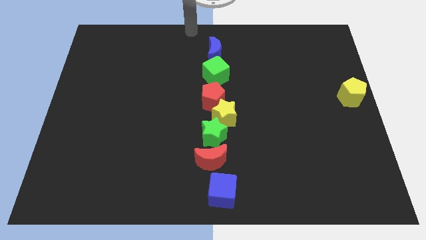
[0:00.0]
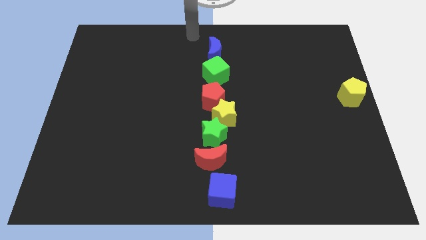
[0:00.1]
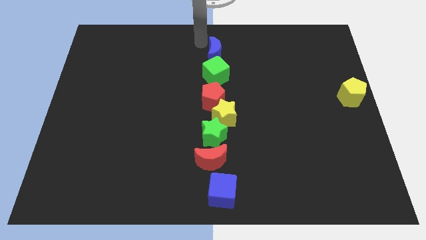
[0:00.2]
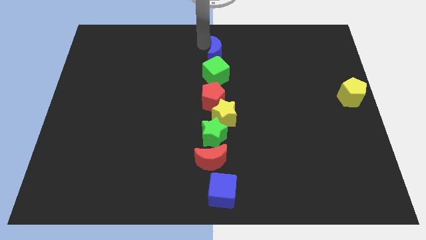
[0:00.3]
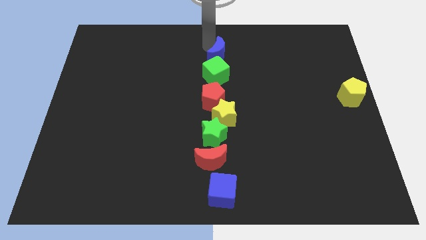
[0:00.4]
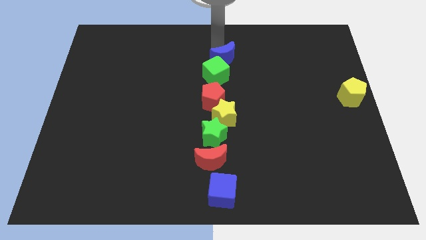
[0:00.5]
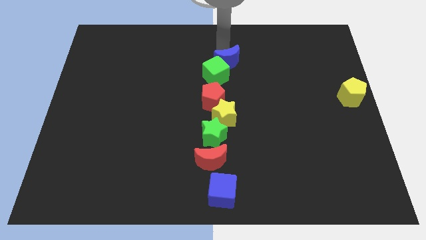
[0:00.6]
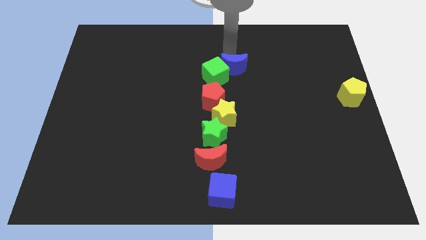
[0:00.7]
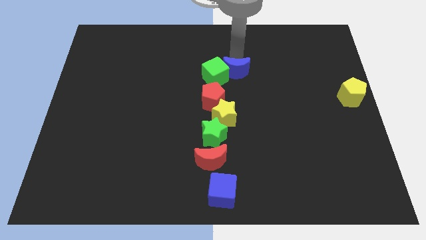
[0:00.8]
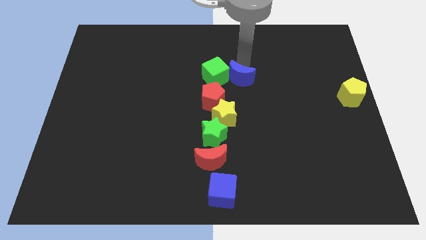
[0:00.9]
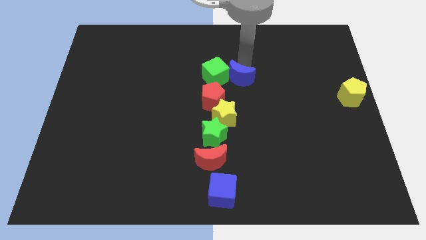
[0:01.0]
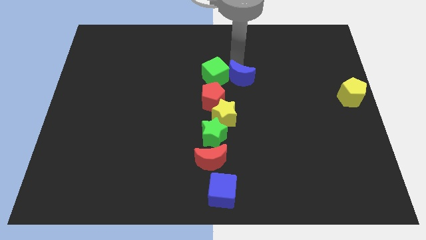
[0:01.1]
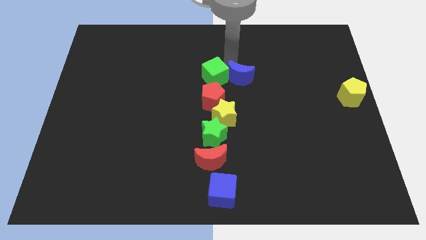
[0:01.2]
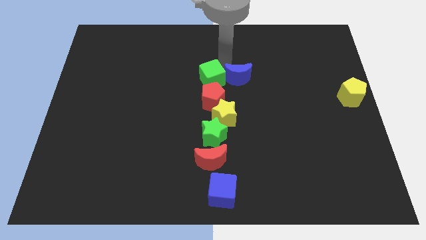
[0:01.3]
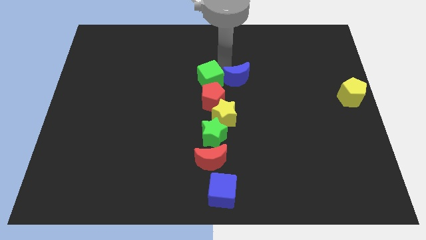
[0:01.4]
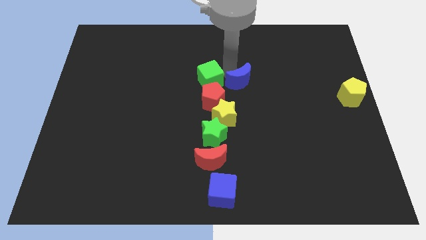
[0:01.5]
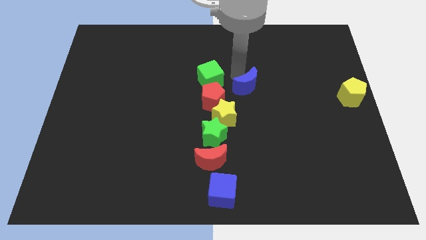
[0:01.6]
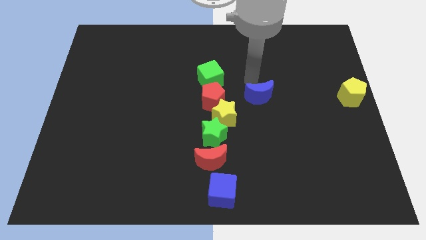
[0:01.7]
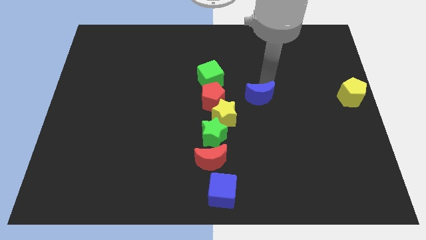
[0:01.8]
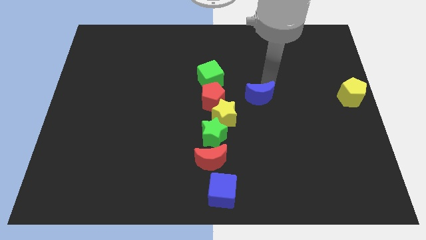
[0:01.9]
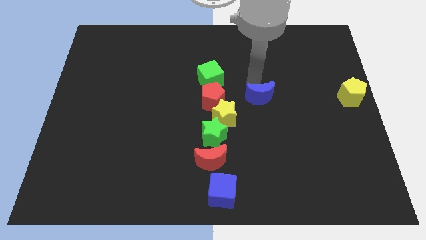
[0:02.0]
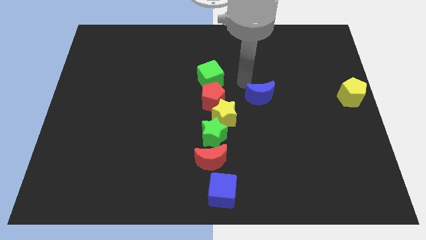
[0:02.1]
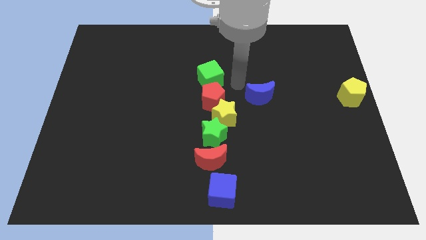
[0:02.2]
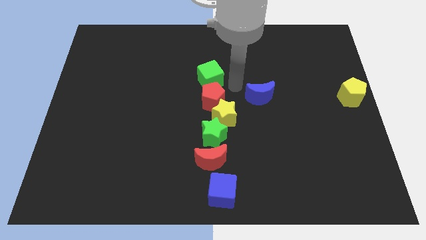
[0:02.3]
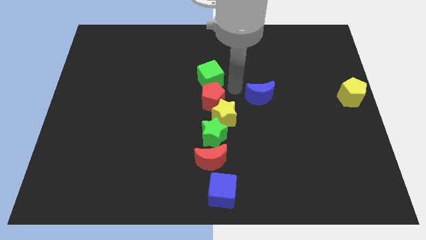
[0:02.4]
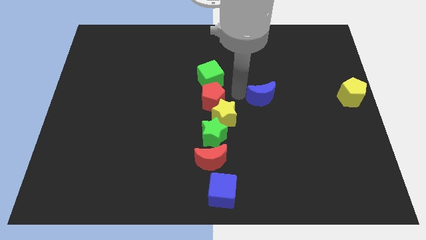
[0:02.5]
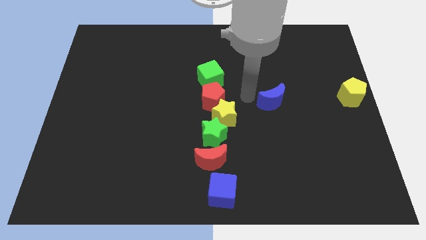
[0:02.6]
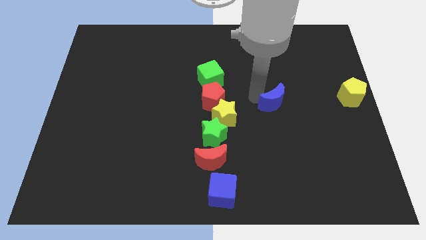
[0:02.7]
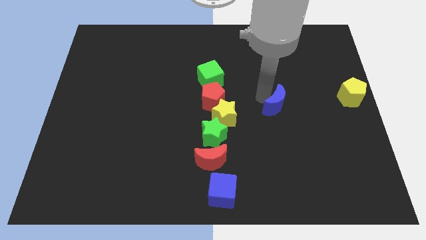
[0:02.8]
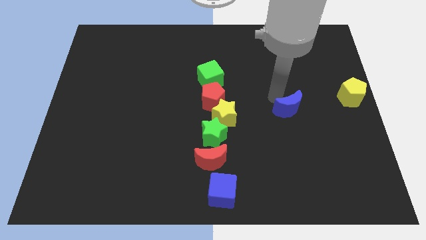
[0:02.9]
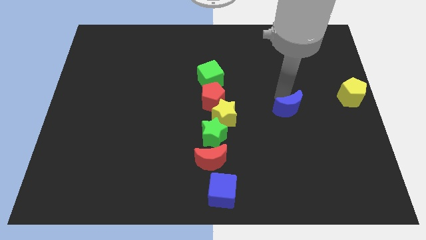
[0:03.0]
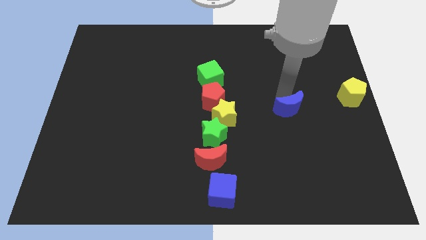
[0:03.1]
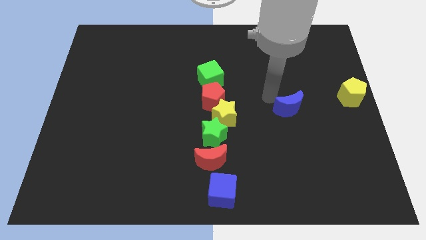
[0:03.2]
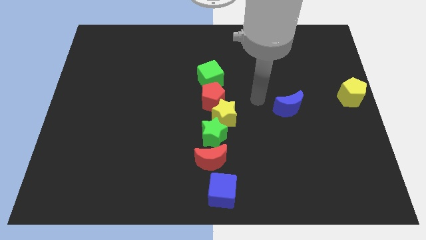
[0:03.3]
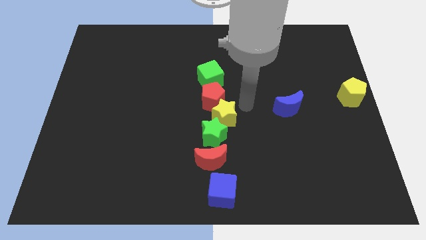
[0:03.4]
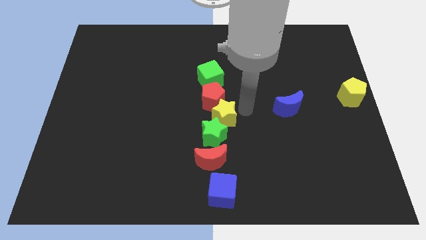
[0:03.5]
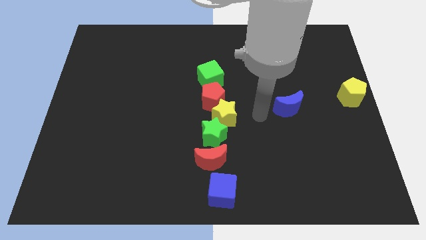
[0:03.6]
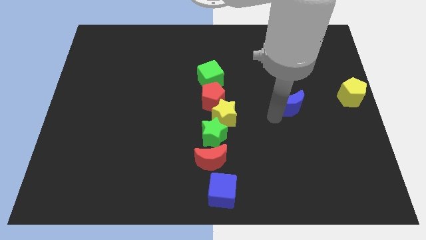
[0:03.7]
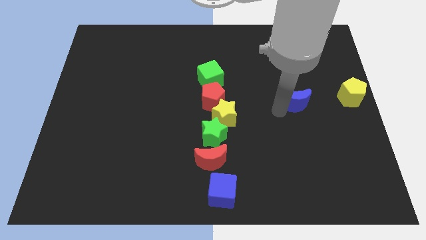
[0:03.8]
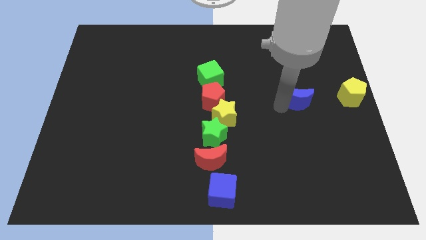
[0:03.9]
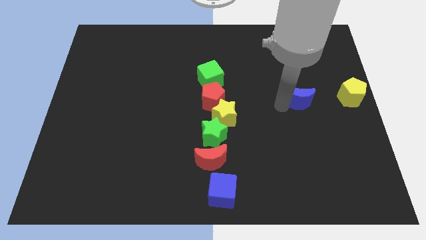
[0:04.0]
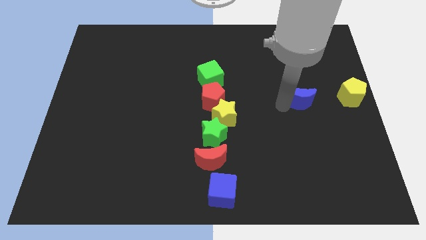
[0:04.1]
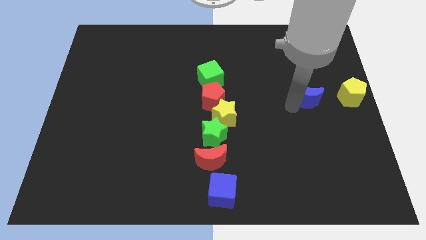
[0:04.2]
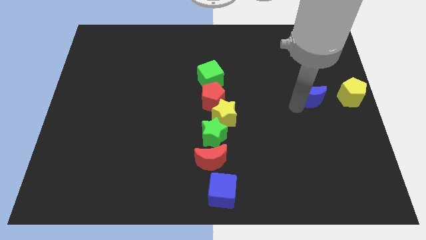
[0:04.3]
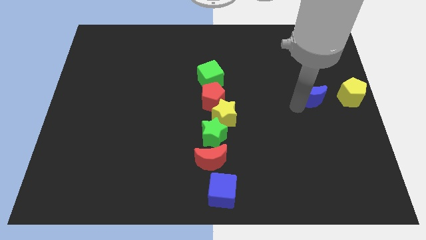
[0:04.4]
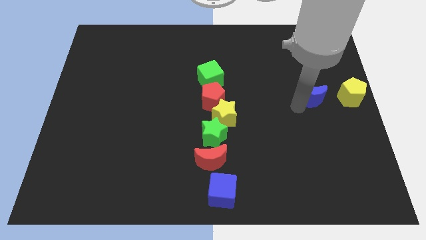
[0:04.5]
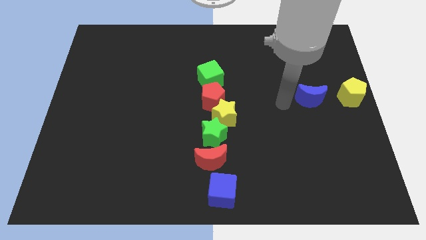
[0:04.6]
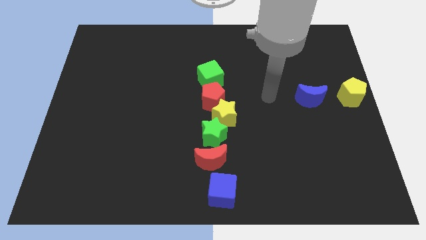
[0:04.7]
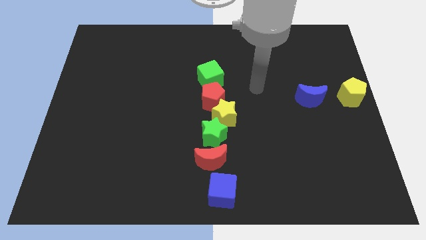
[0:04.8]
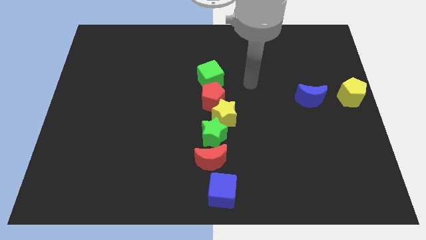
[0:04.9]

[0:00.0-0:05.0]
slightly move the blue crescent to the left of the yellow pentagon

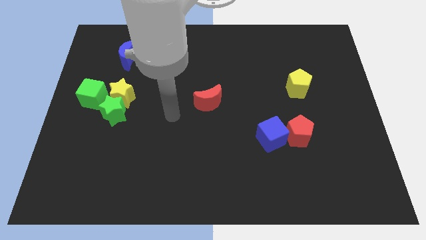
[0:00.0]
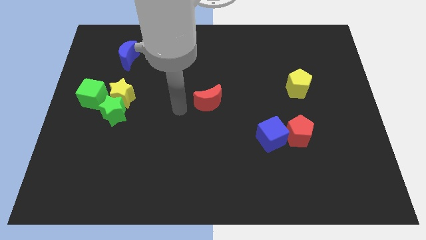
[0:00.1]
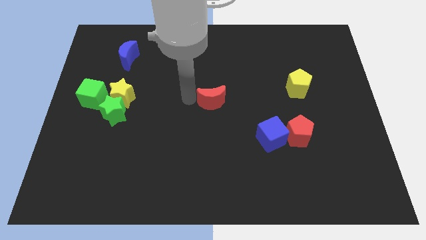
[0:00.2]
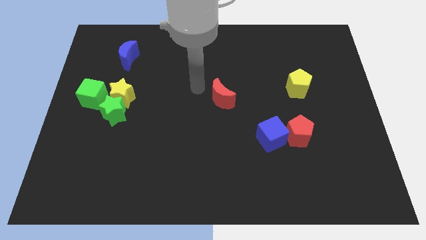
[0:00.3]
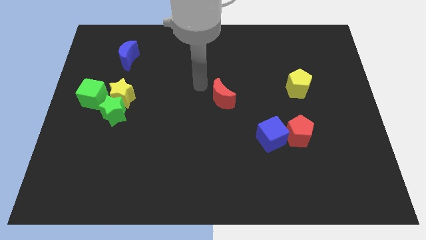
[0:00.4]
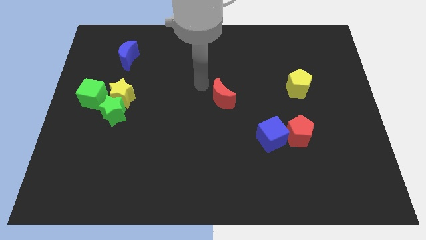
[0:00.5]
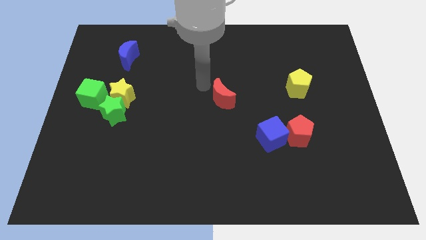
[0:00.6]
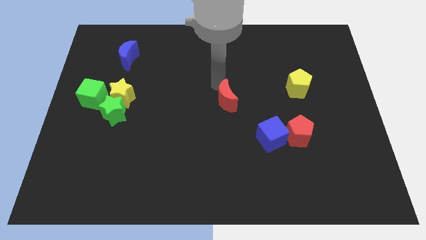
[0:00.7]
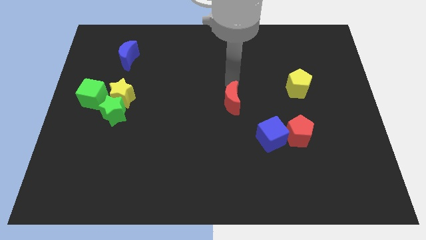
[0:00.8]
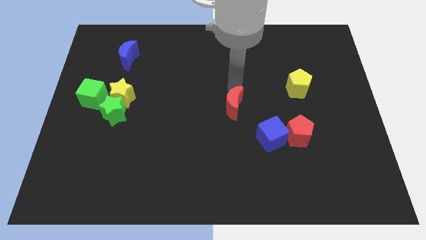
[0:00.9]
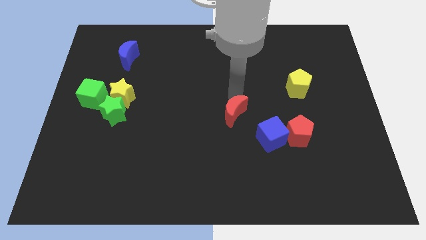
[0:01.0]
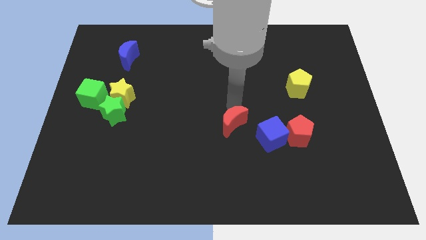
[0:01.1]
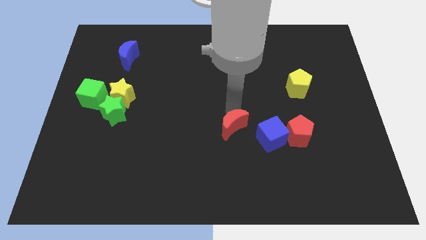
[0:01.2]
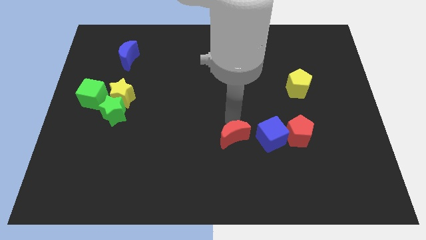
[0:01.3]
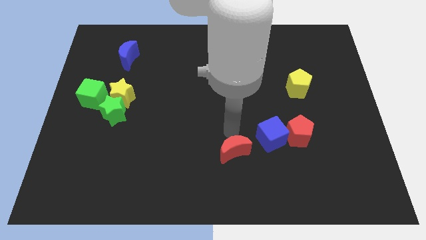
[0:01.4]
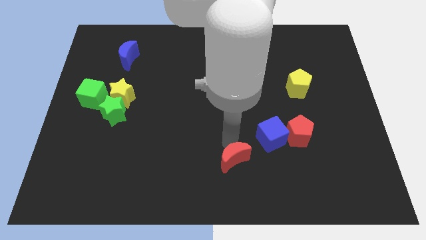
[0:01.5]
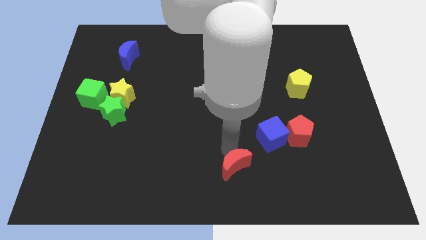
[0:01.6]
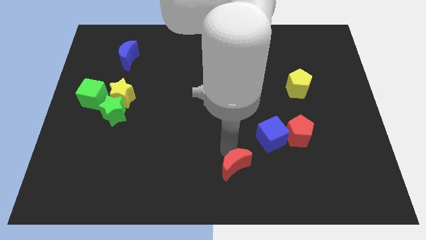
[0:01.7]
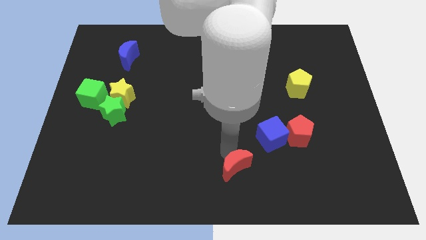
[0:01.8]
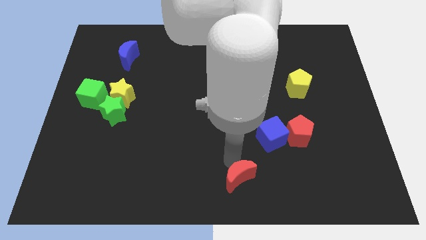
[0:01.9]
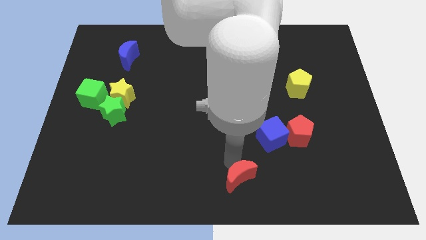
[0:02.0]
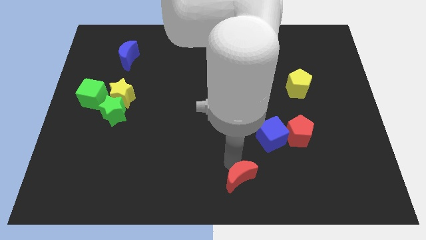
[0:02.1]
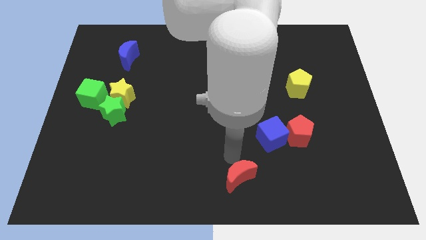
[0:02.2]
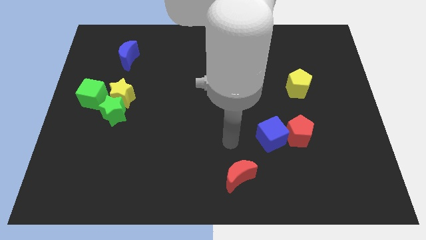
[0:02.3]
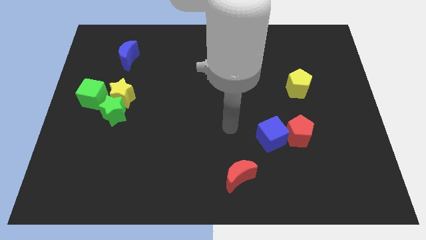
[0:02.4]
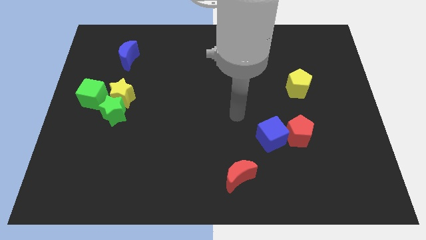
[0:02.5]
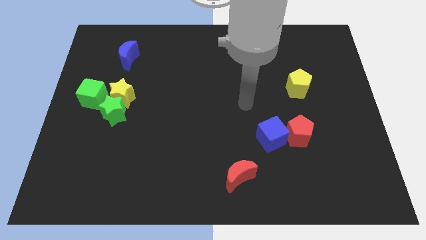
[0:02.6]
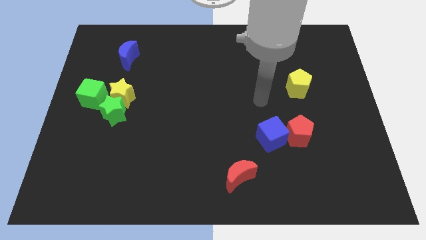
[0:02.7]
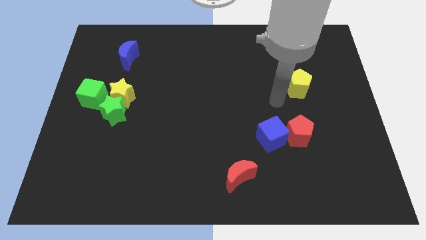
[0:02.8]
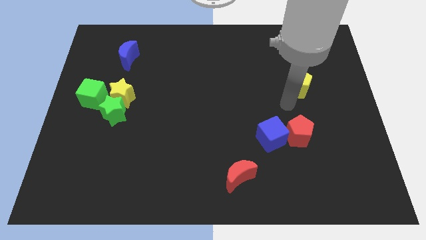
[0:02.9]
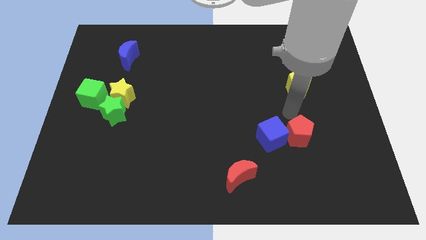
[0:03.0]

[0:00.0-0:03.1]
move the red moon diagonal bottom left to blue cube

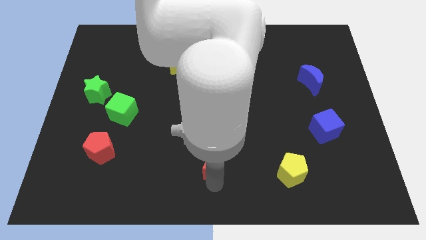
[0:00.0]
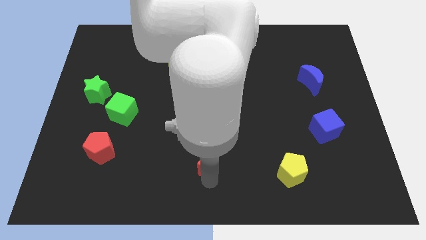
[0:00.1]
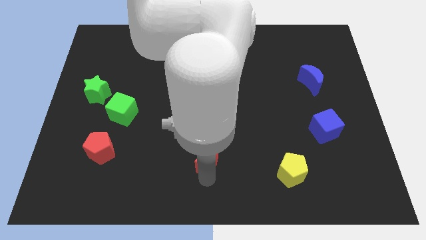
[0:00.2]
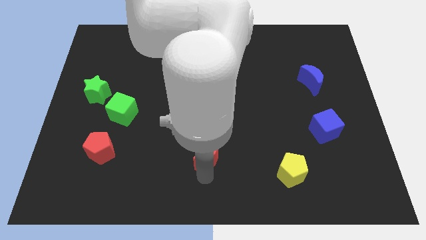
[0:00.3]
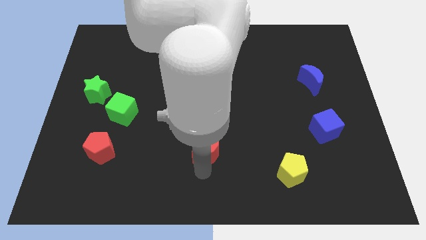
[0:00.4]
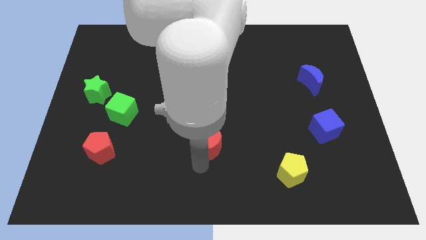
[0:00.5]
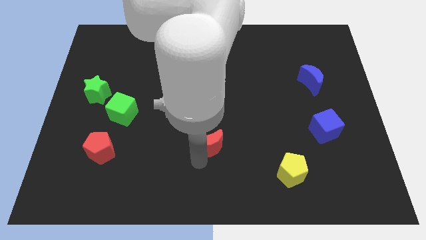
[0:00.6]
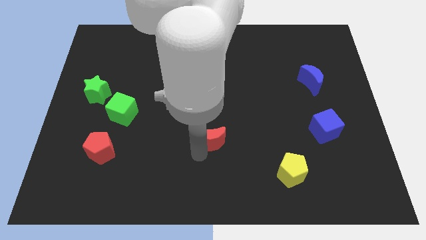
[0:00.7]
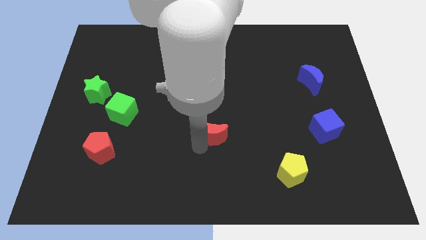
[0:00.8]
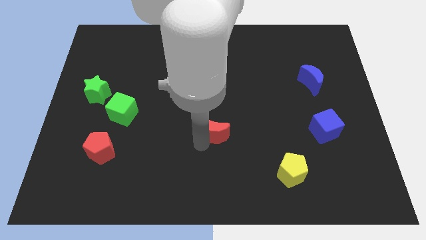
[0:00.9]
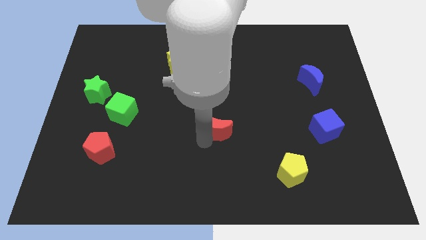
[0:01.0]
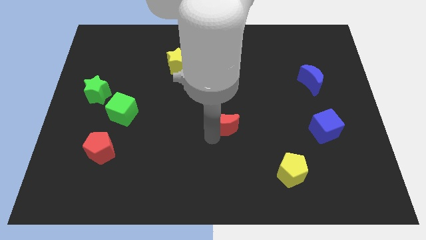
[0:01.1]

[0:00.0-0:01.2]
move the red moon towards the center of the board
